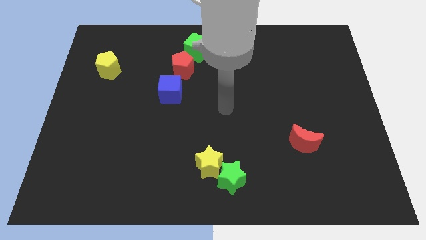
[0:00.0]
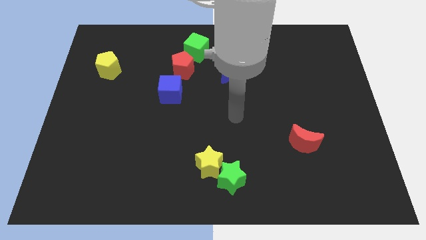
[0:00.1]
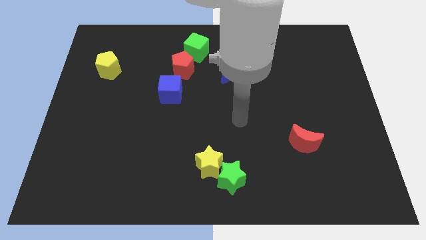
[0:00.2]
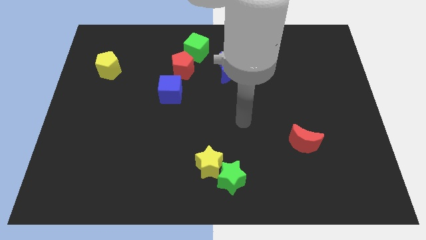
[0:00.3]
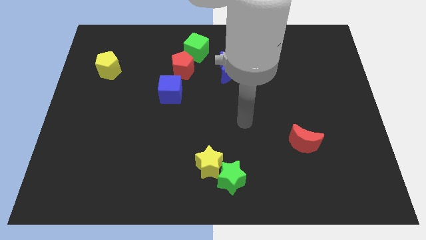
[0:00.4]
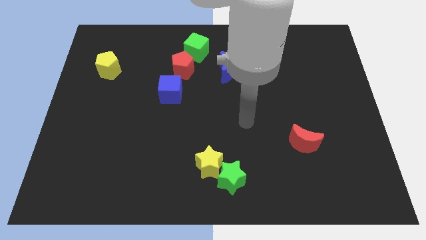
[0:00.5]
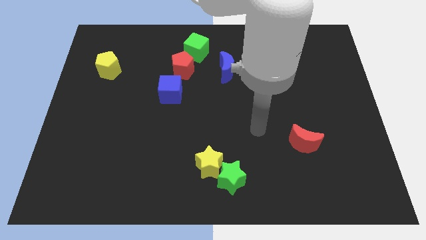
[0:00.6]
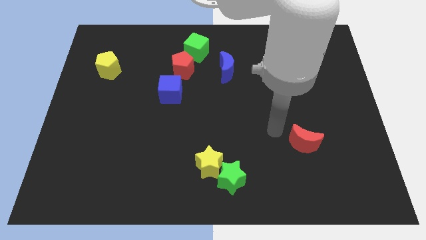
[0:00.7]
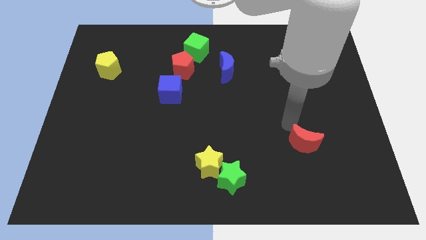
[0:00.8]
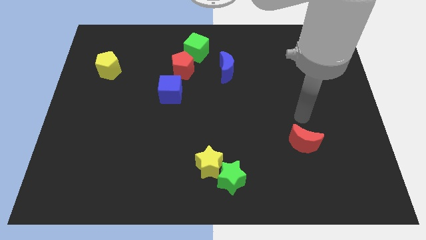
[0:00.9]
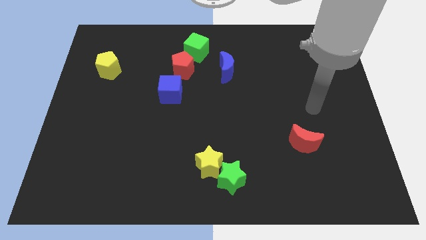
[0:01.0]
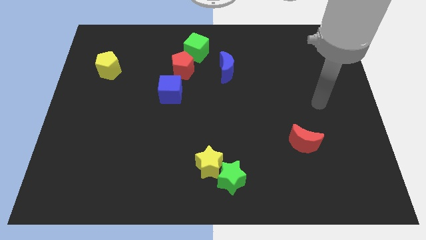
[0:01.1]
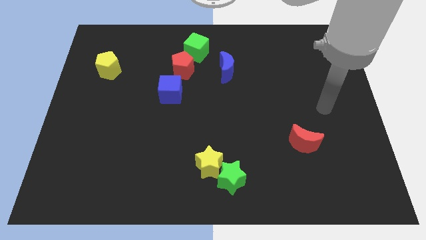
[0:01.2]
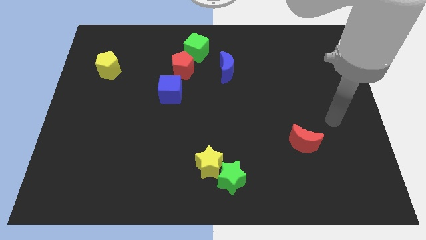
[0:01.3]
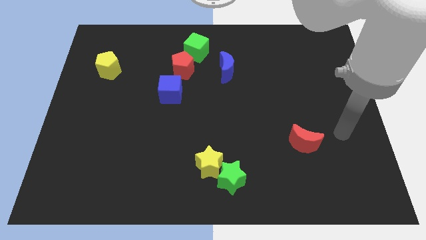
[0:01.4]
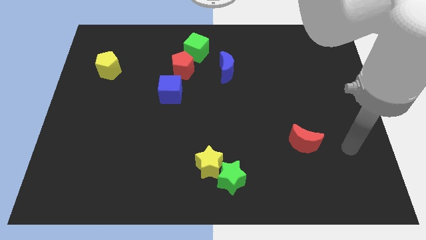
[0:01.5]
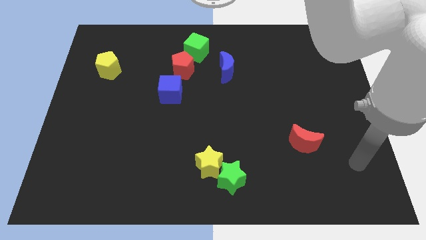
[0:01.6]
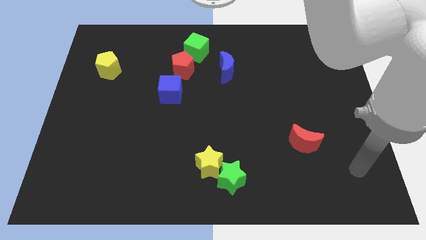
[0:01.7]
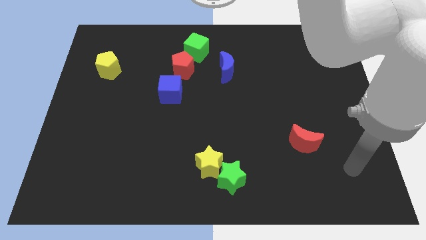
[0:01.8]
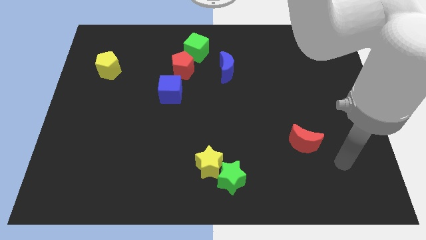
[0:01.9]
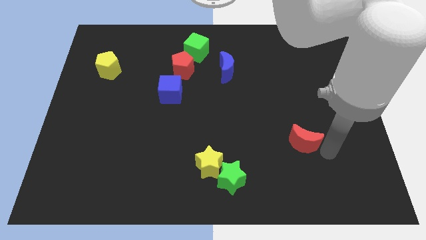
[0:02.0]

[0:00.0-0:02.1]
move the arm to the bottom of the red crescent

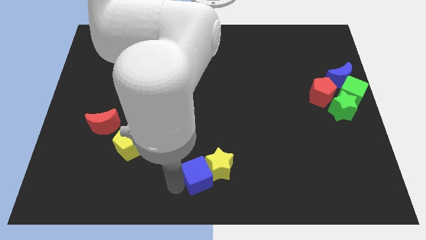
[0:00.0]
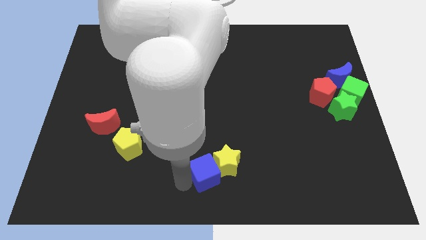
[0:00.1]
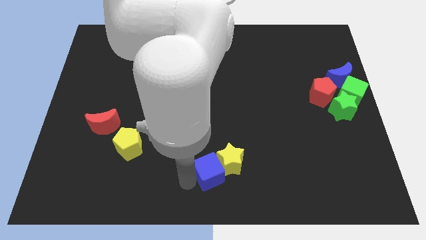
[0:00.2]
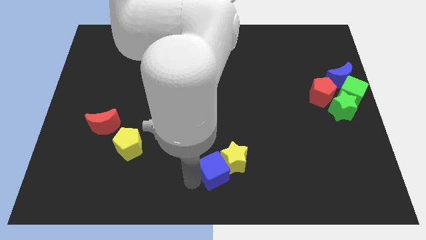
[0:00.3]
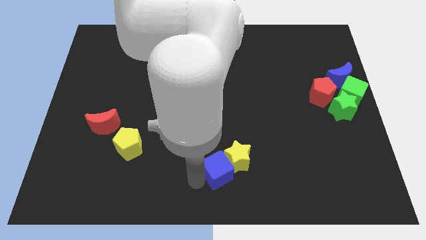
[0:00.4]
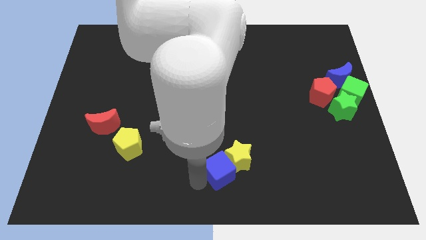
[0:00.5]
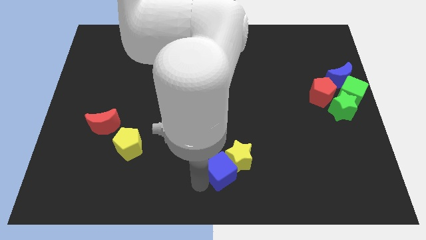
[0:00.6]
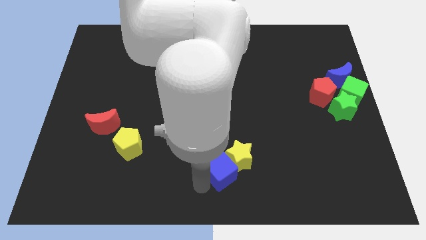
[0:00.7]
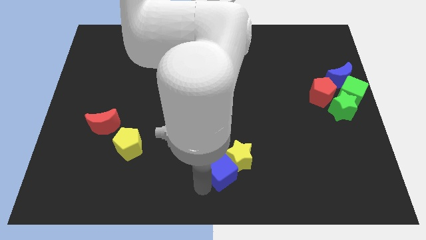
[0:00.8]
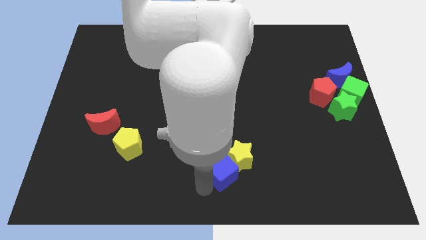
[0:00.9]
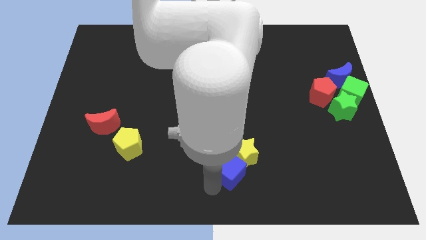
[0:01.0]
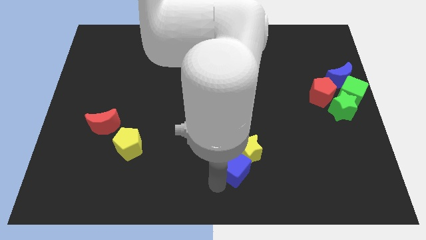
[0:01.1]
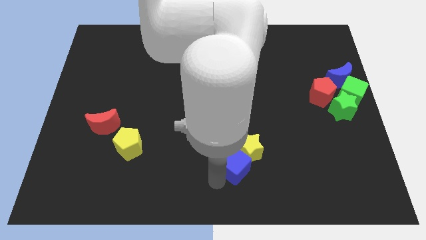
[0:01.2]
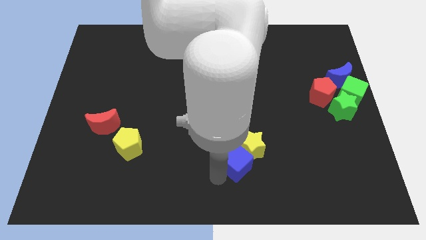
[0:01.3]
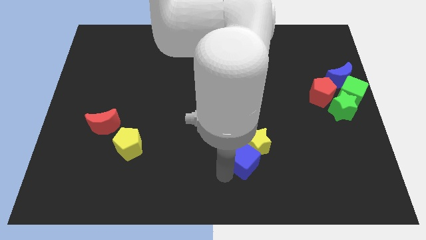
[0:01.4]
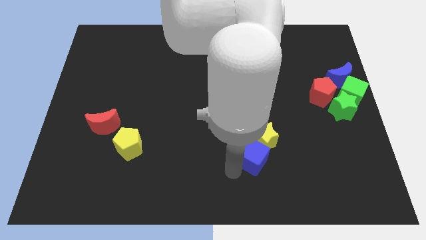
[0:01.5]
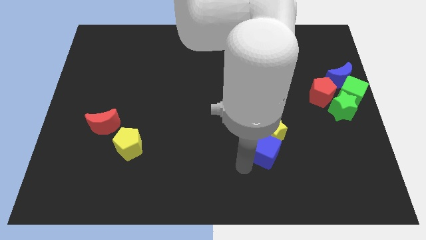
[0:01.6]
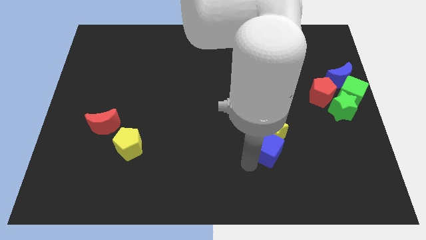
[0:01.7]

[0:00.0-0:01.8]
place the blue cube below the yellow star

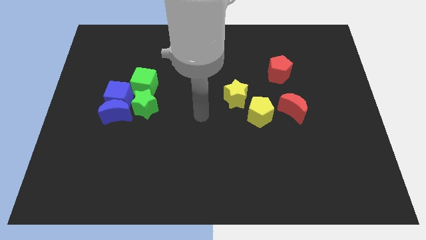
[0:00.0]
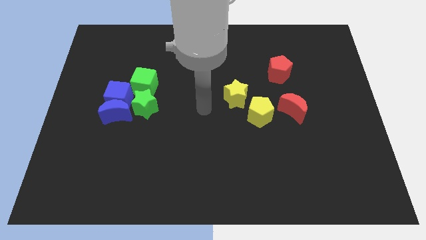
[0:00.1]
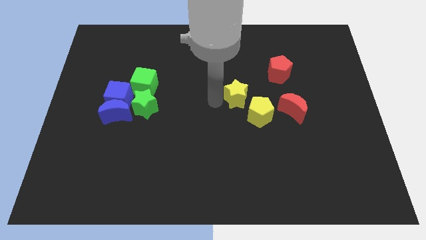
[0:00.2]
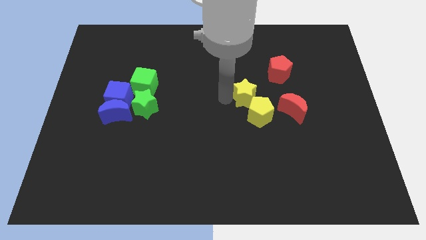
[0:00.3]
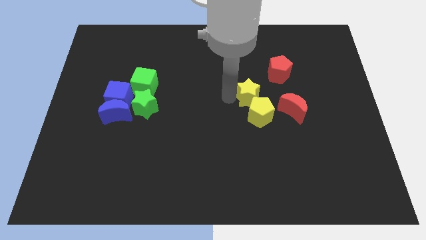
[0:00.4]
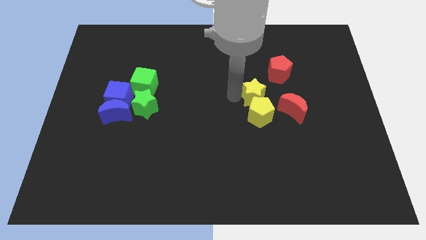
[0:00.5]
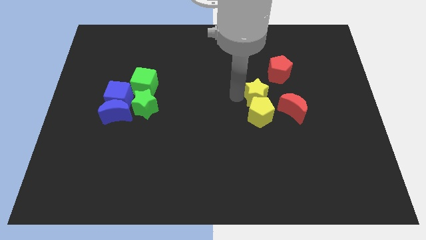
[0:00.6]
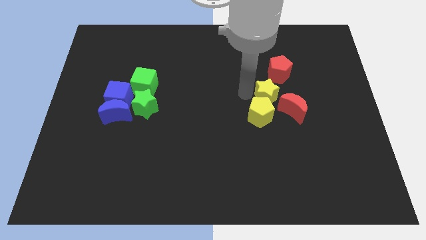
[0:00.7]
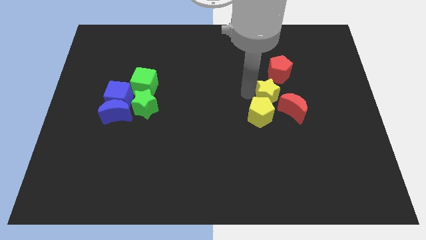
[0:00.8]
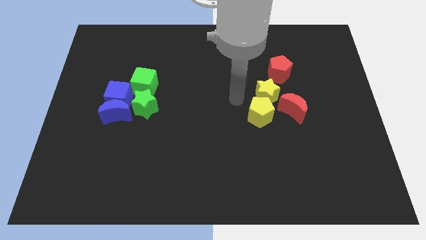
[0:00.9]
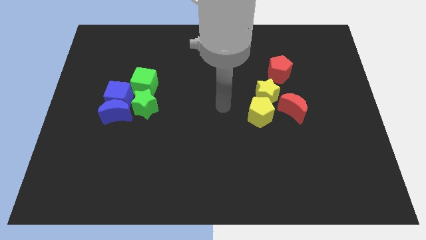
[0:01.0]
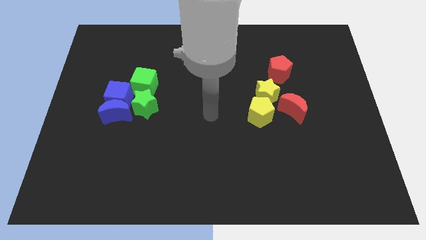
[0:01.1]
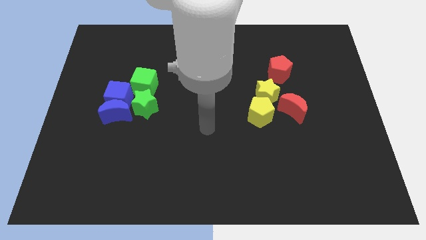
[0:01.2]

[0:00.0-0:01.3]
move the yellow star right above the yellow penatgon

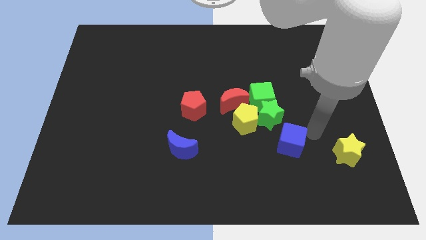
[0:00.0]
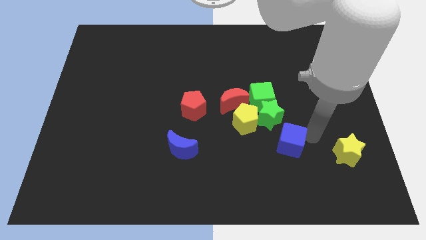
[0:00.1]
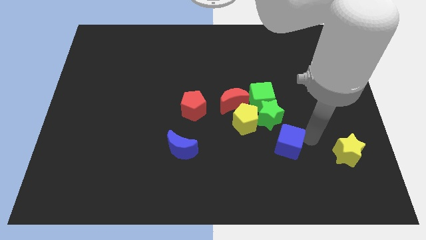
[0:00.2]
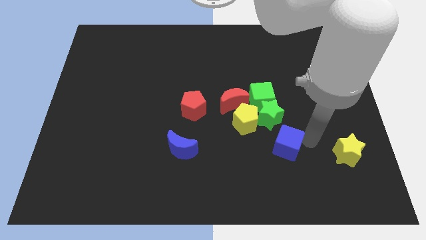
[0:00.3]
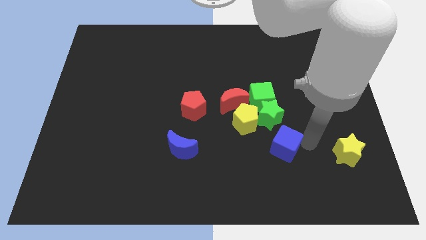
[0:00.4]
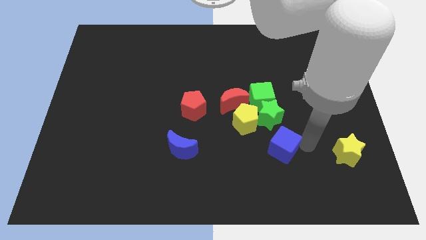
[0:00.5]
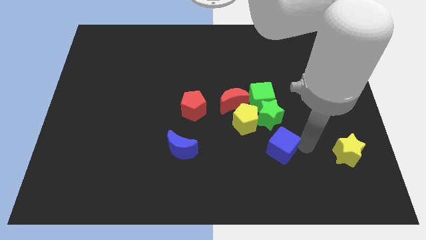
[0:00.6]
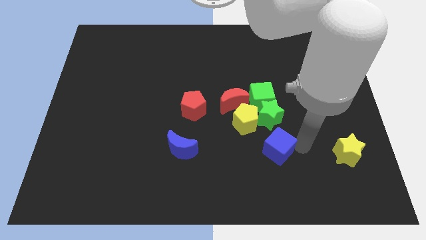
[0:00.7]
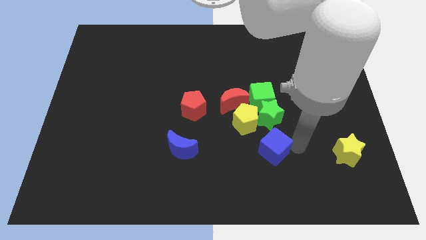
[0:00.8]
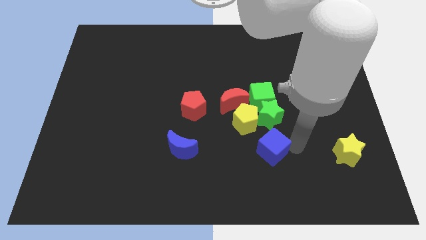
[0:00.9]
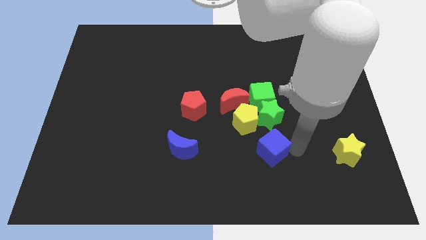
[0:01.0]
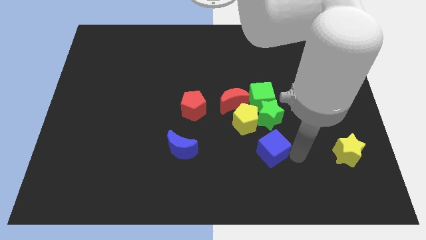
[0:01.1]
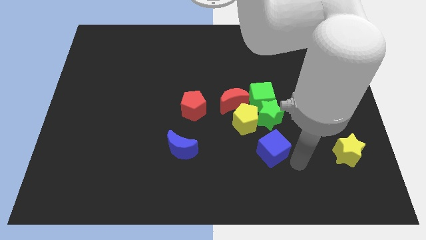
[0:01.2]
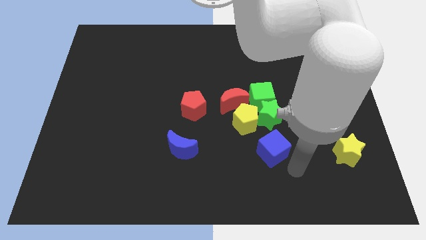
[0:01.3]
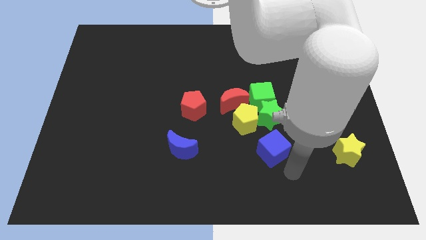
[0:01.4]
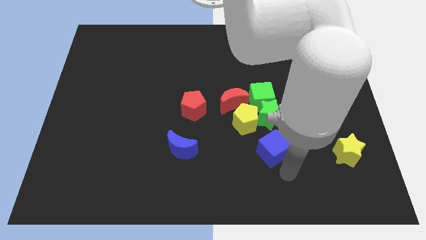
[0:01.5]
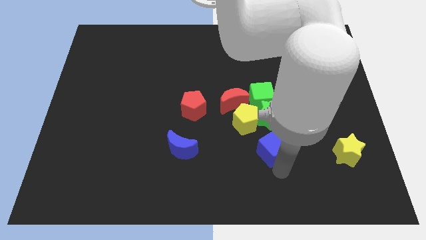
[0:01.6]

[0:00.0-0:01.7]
place blue cube below green star

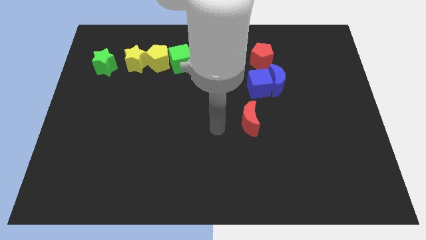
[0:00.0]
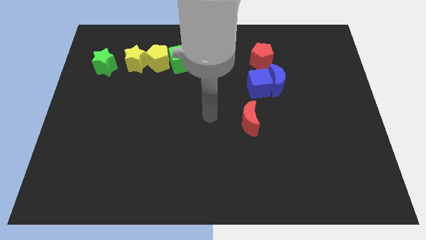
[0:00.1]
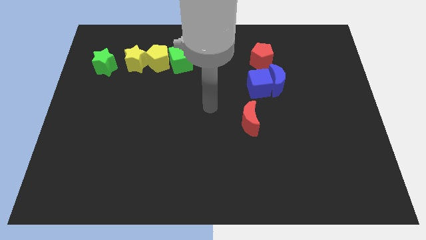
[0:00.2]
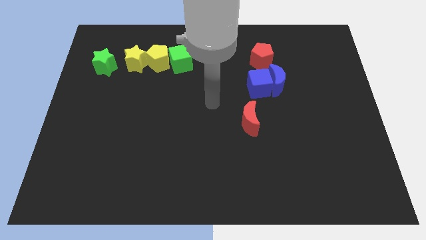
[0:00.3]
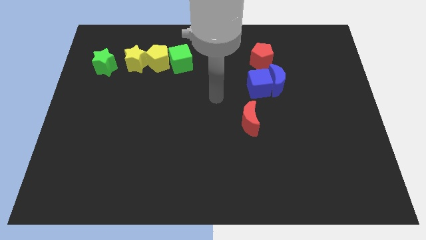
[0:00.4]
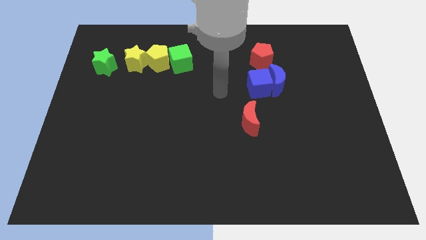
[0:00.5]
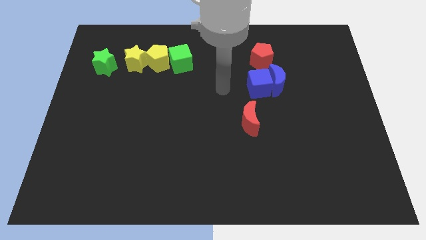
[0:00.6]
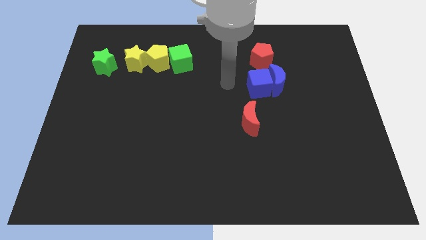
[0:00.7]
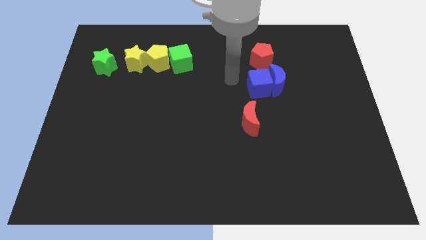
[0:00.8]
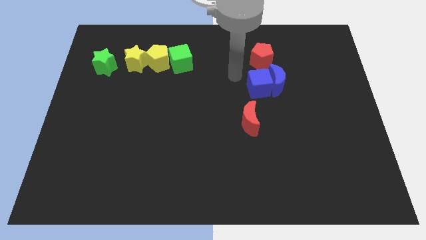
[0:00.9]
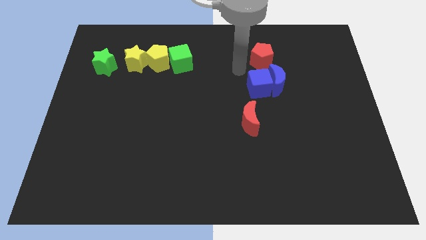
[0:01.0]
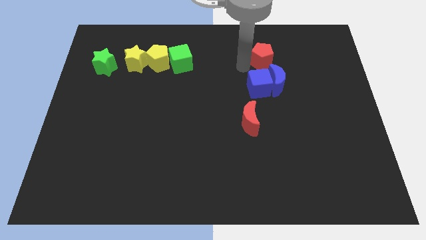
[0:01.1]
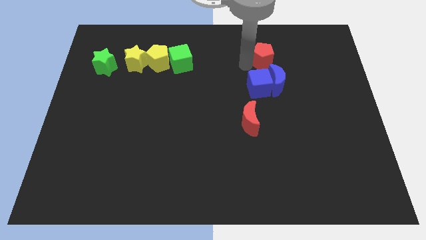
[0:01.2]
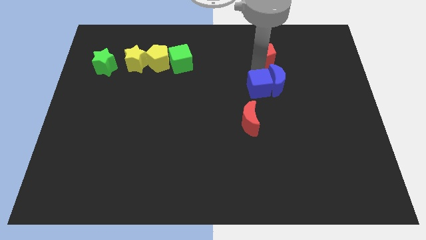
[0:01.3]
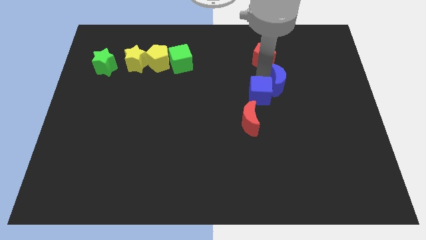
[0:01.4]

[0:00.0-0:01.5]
move close to the red pentagon

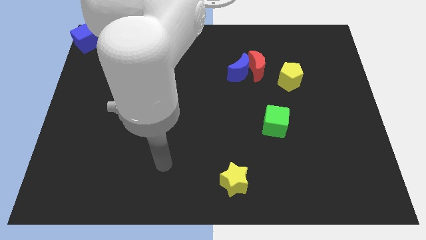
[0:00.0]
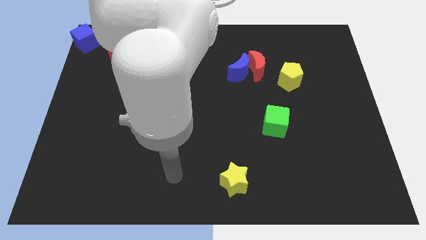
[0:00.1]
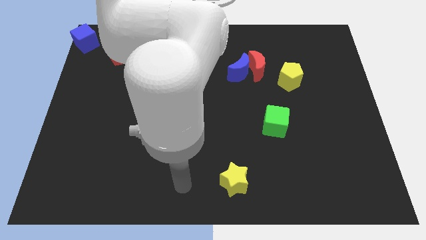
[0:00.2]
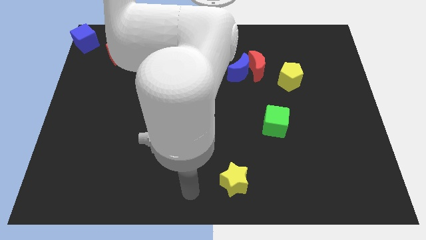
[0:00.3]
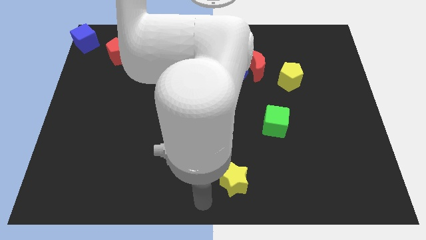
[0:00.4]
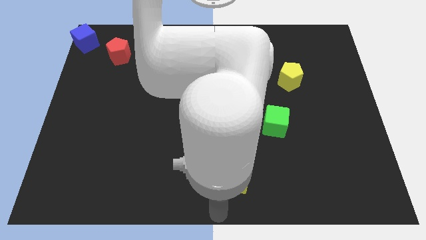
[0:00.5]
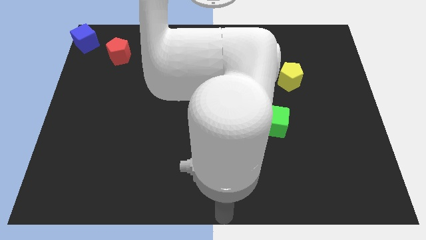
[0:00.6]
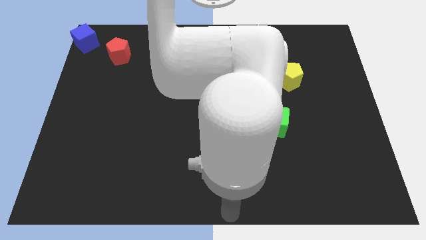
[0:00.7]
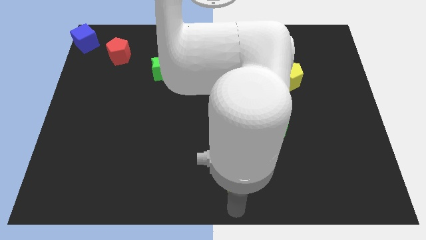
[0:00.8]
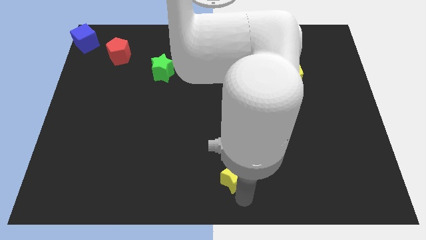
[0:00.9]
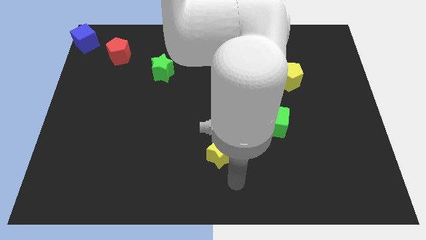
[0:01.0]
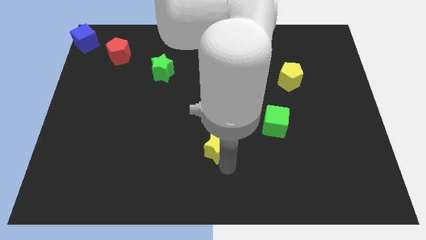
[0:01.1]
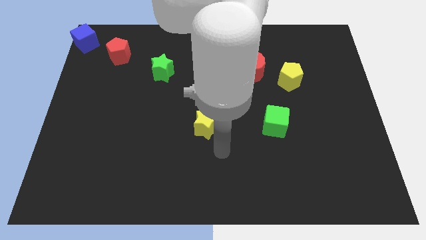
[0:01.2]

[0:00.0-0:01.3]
put the yellow star to the left side of the green cube
